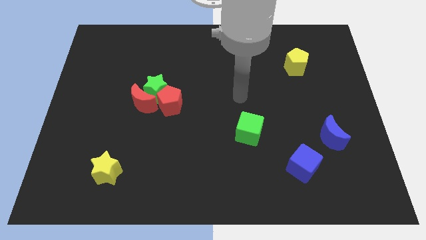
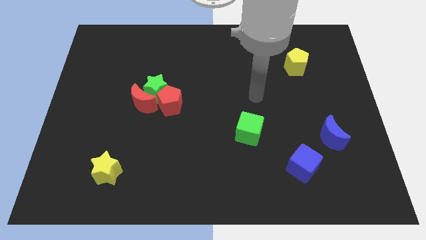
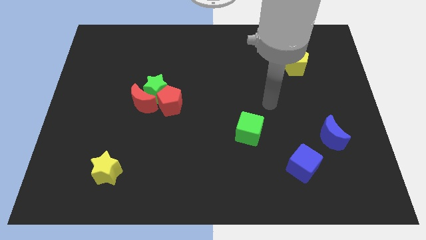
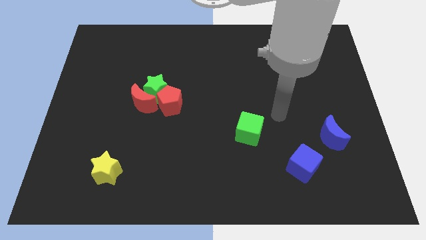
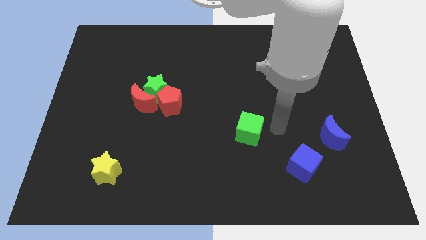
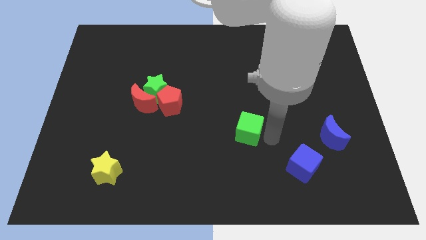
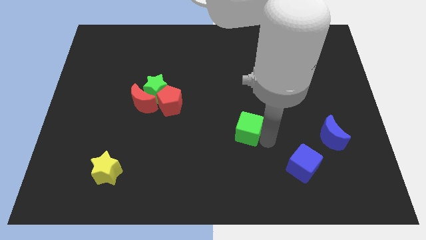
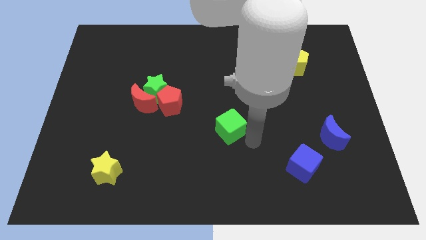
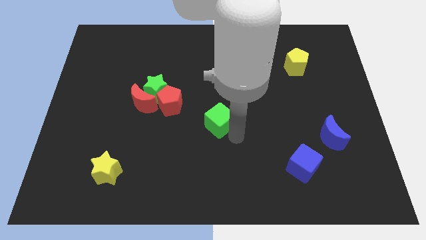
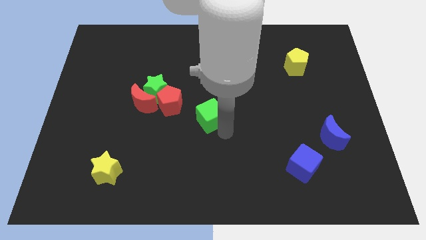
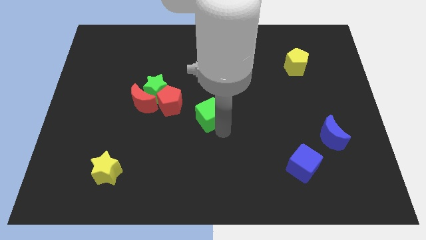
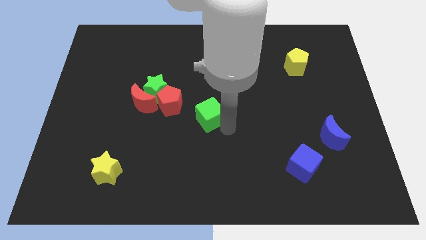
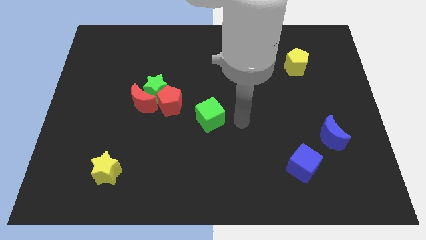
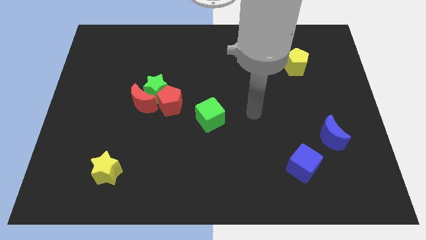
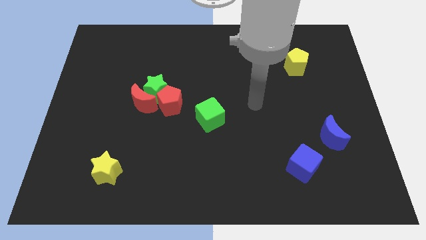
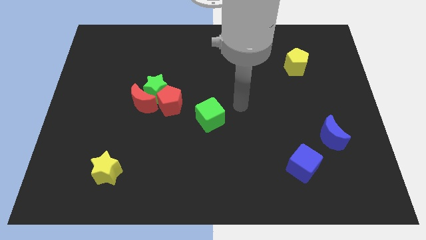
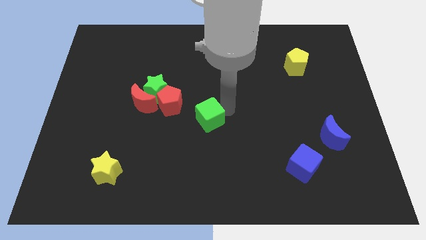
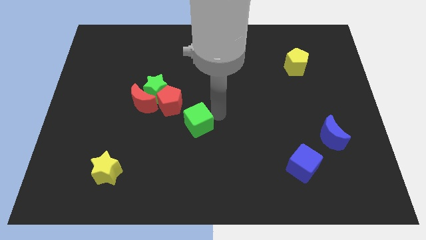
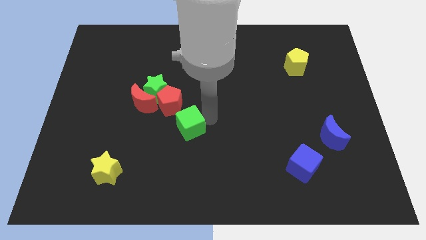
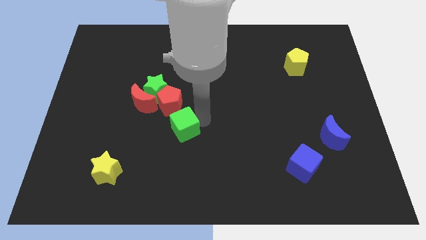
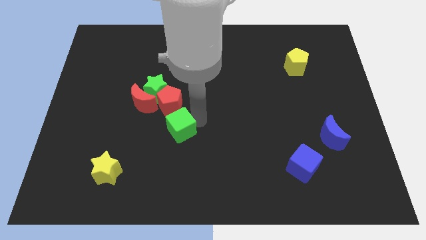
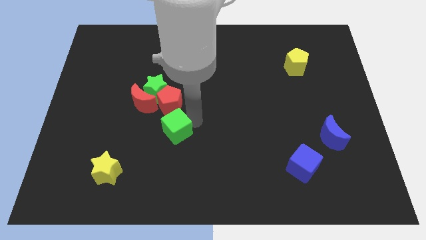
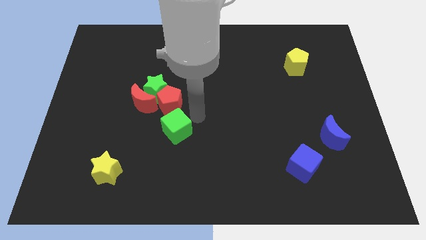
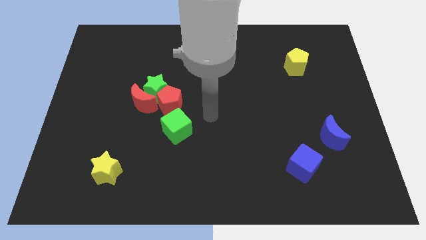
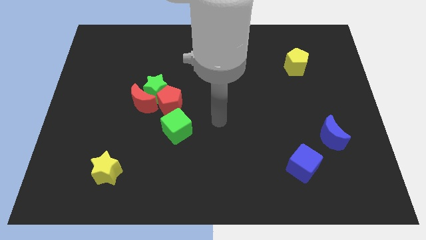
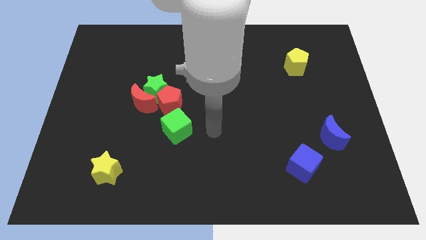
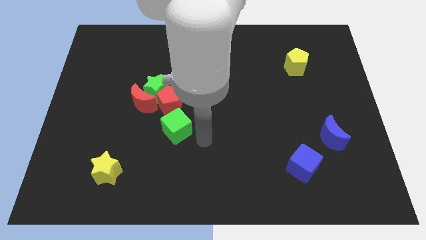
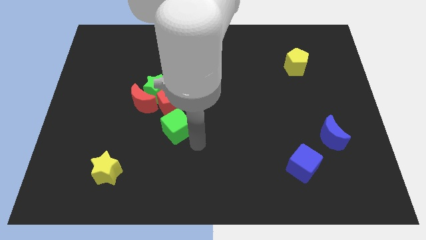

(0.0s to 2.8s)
place the green cube back the red pentagon

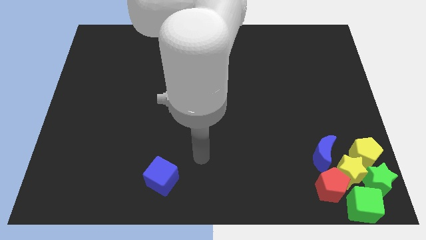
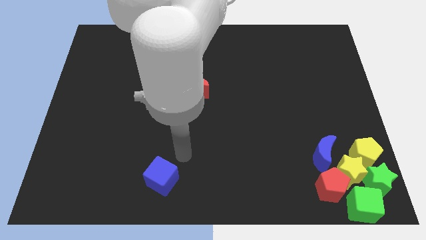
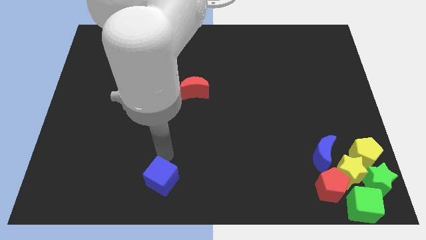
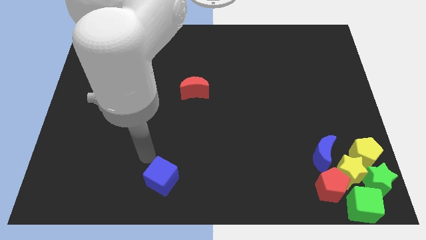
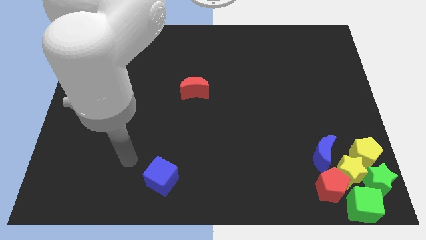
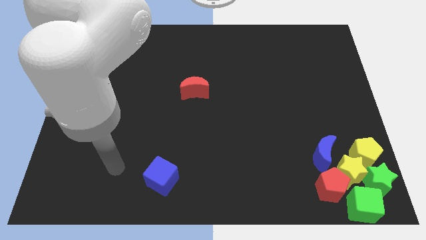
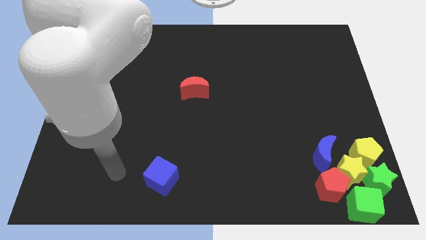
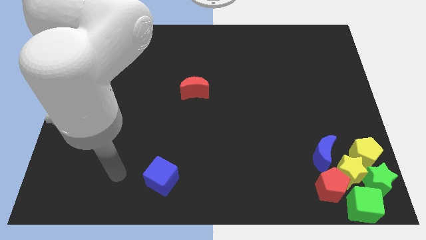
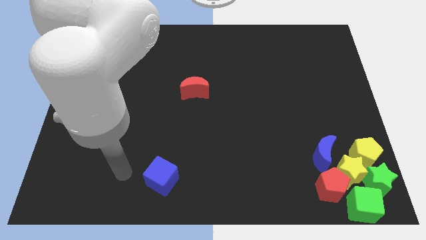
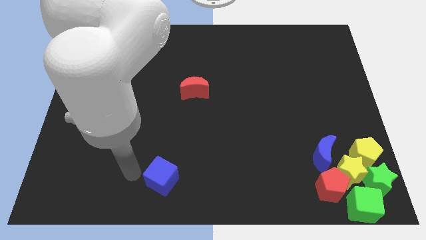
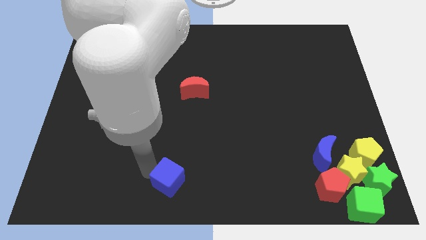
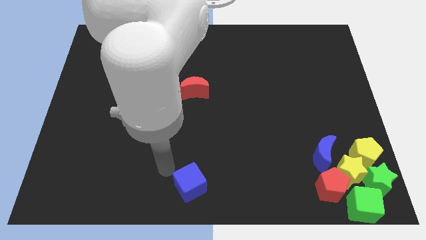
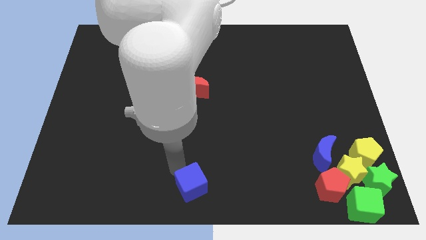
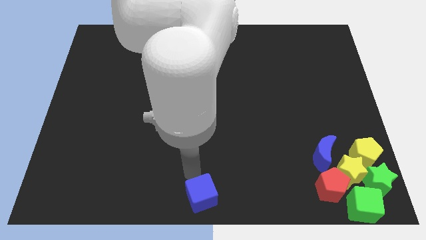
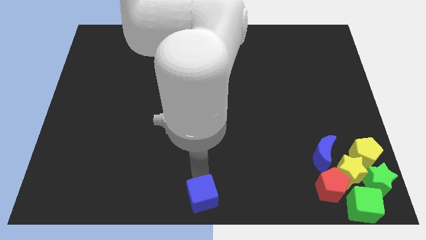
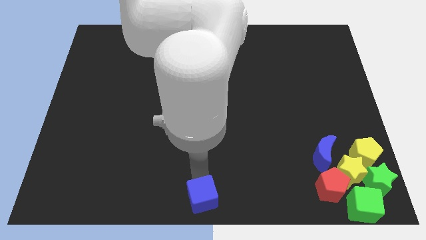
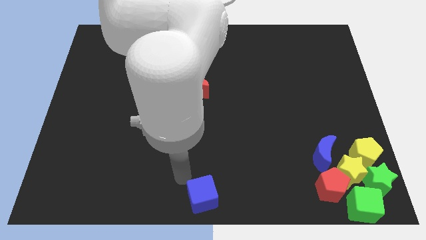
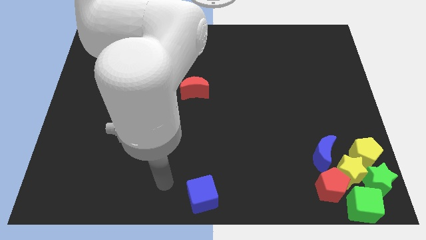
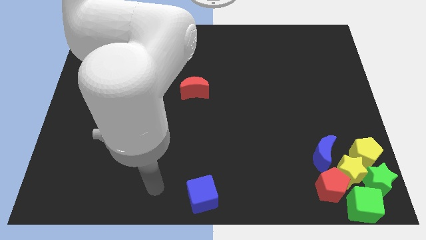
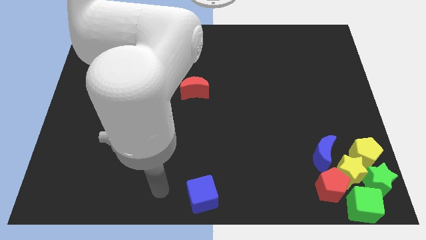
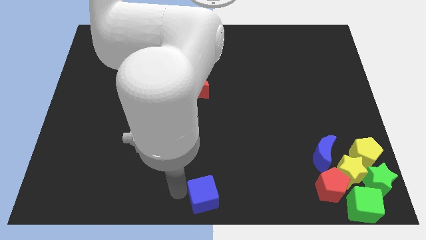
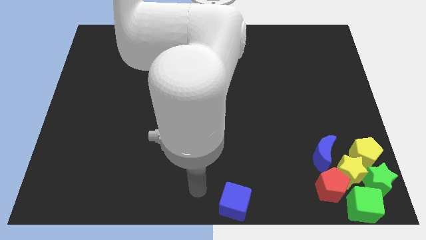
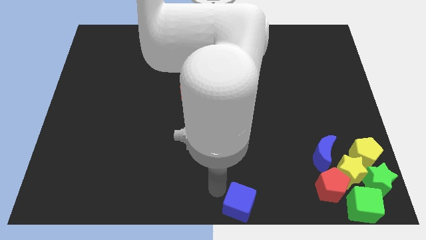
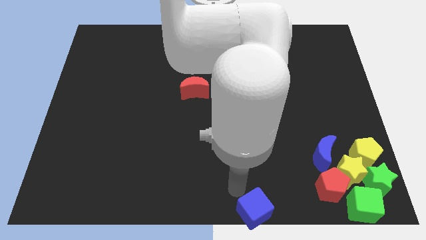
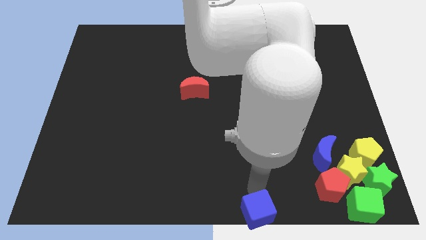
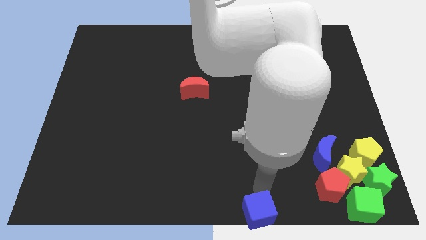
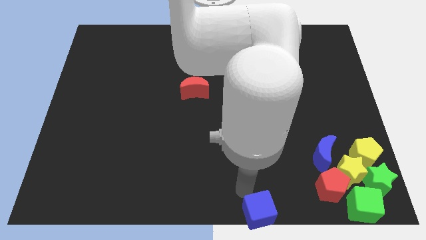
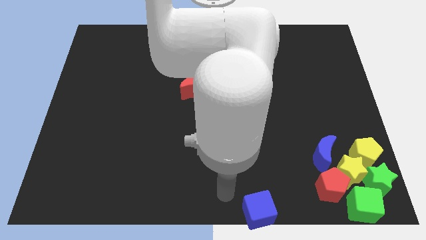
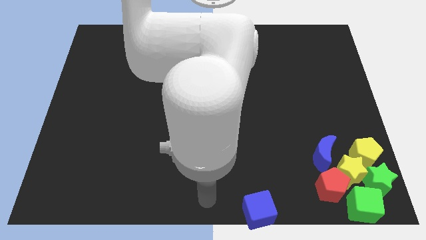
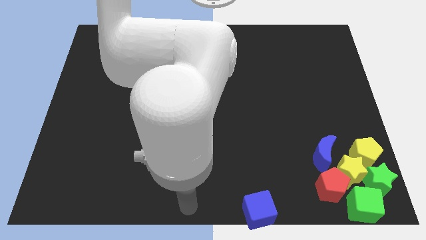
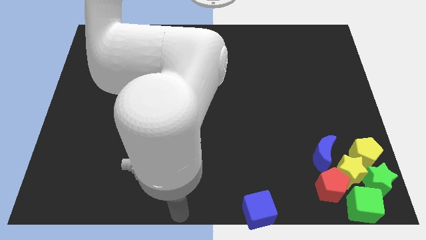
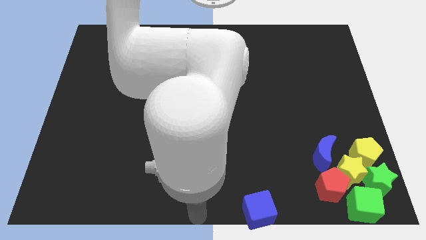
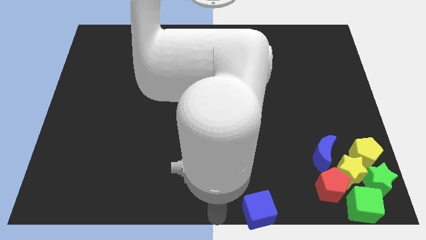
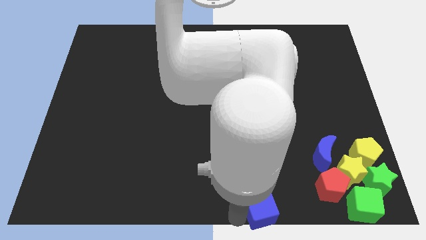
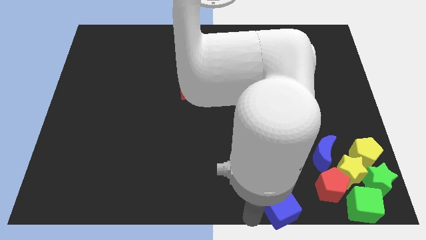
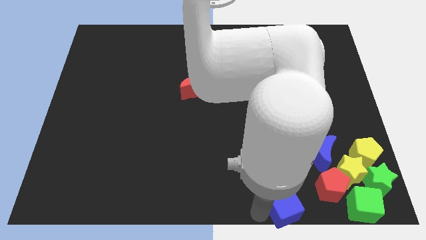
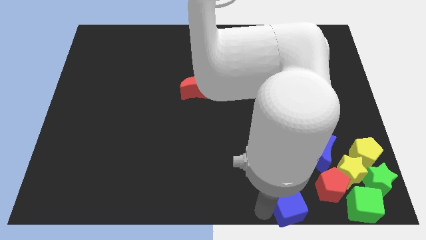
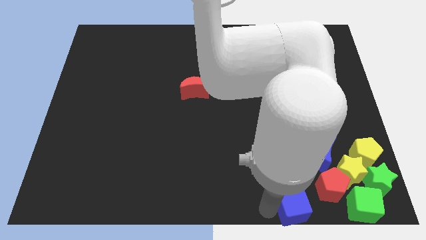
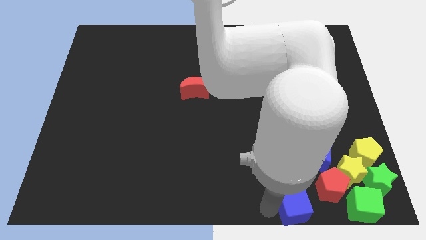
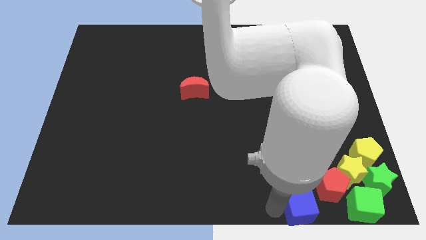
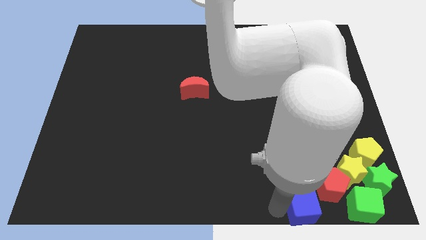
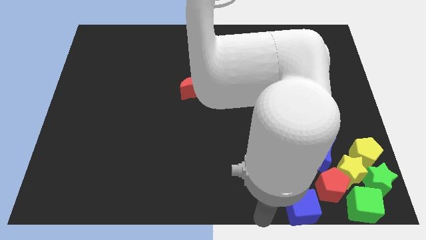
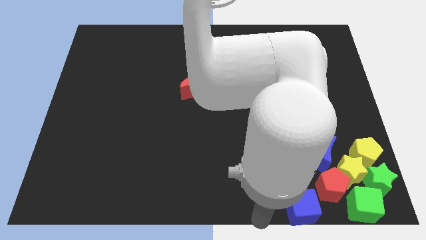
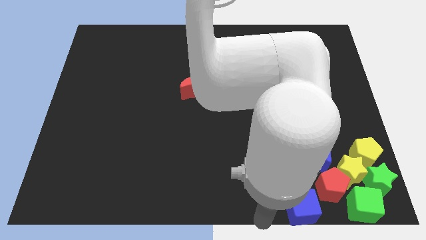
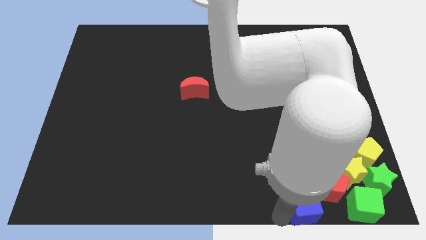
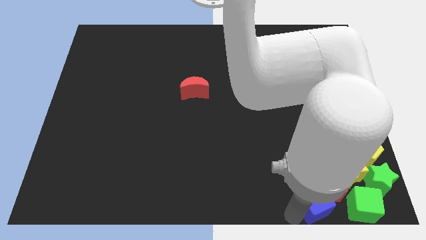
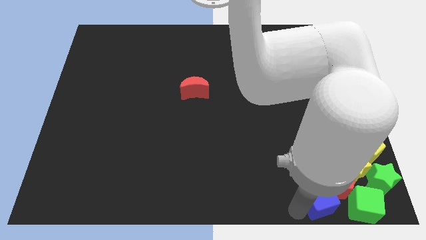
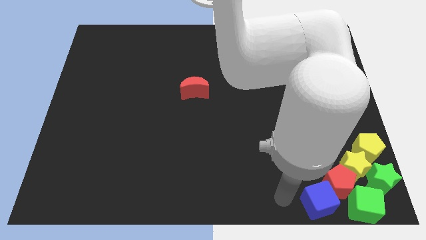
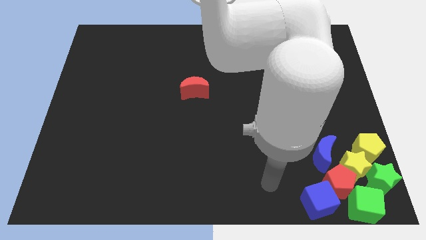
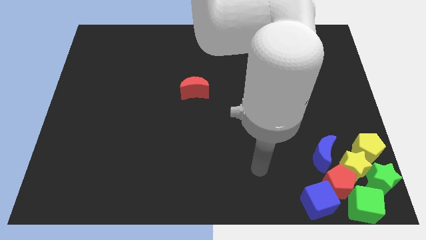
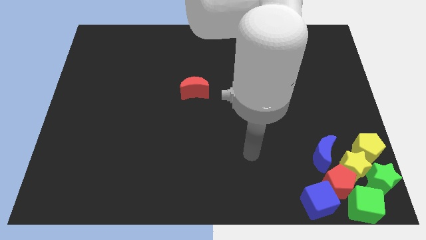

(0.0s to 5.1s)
push the blue cube into the group of blocks

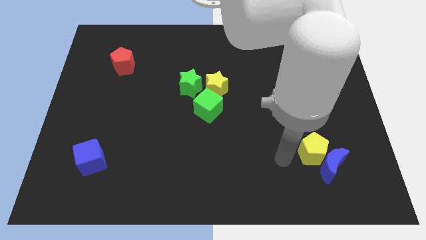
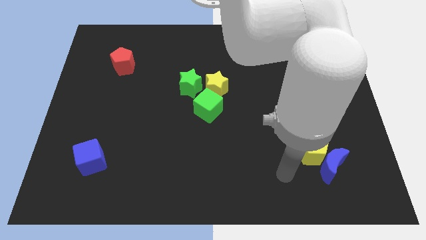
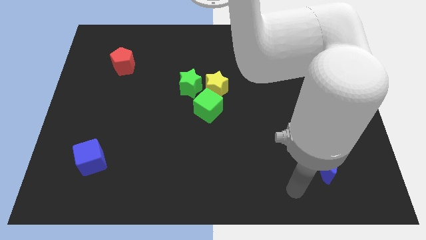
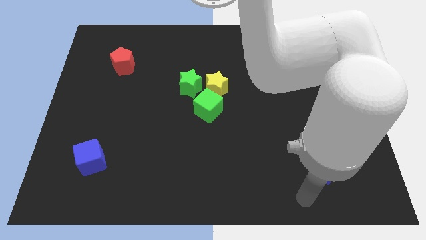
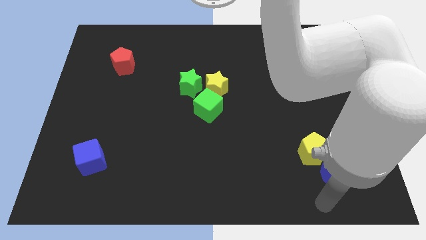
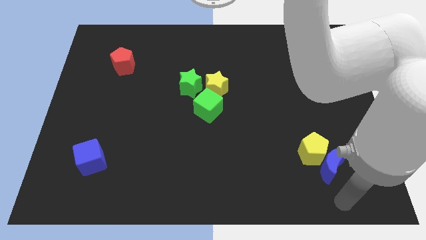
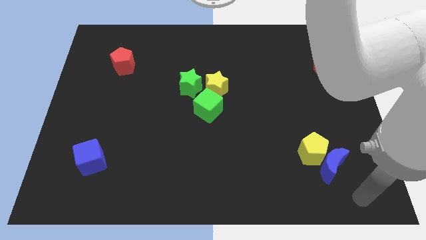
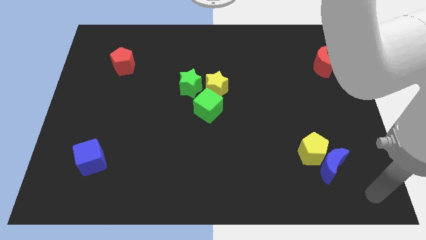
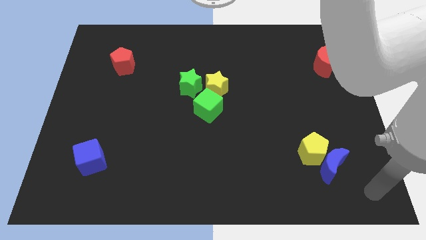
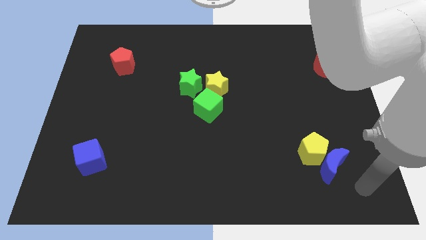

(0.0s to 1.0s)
move the arm to the bottom right corner of the board
